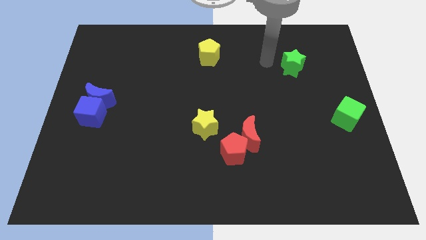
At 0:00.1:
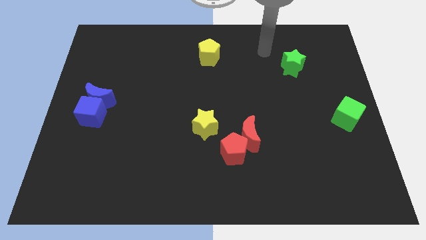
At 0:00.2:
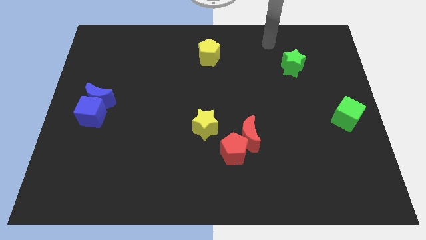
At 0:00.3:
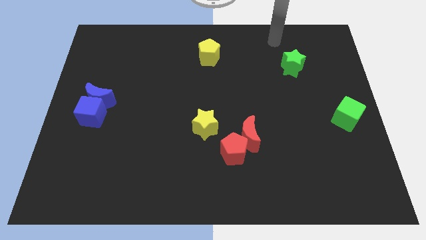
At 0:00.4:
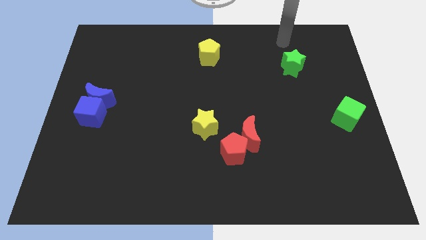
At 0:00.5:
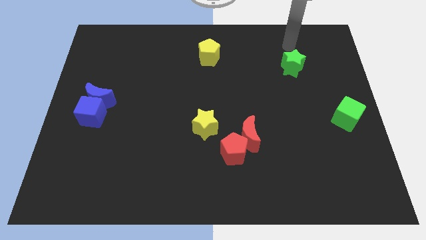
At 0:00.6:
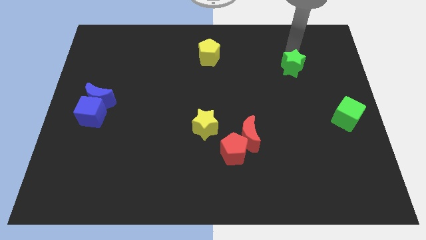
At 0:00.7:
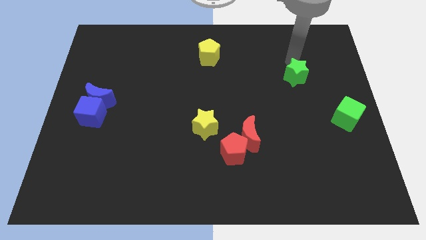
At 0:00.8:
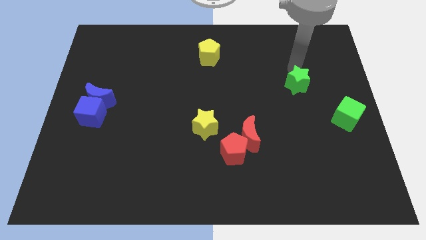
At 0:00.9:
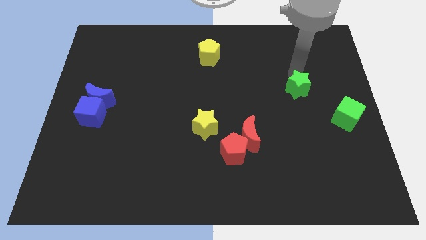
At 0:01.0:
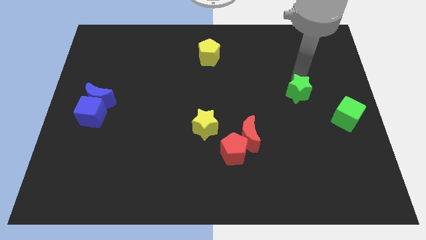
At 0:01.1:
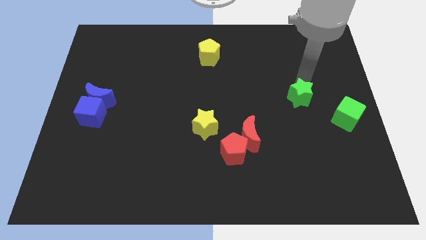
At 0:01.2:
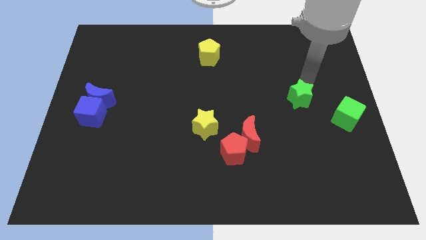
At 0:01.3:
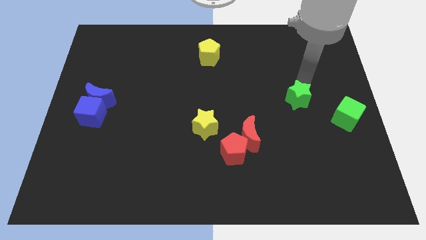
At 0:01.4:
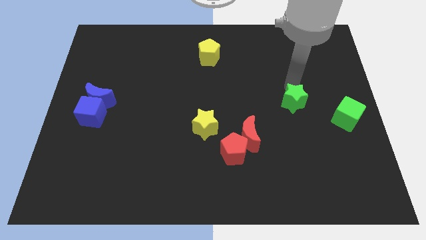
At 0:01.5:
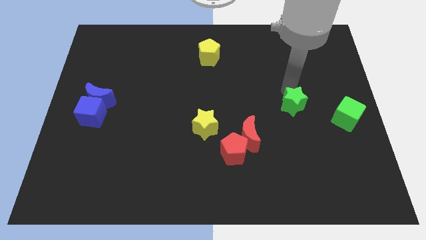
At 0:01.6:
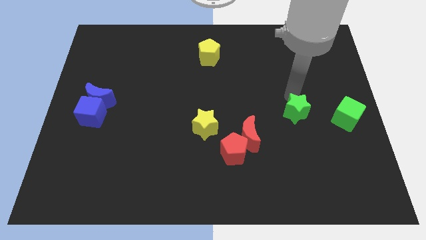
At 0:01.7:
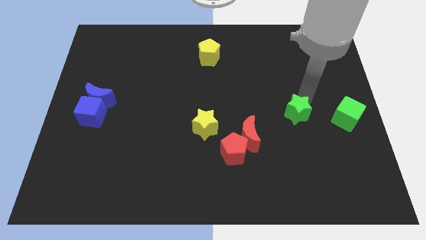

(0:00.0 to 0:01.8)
place the green star horizontally to the left side of the green cube

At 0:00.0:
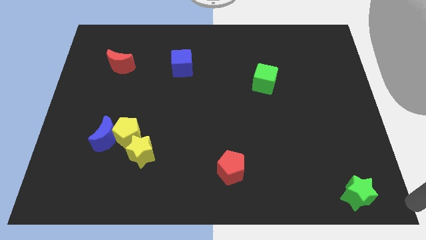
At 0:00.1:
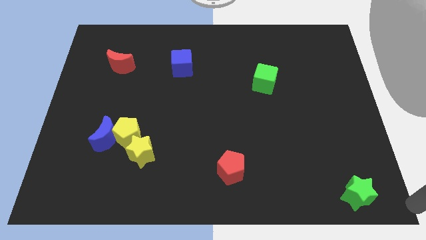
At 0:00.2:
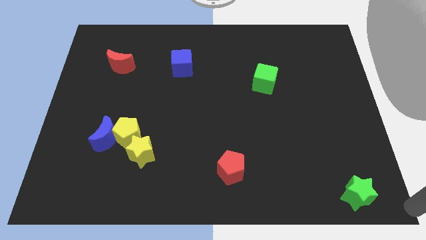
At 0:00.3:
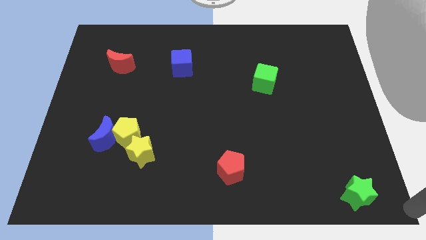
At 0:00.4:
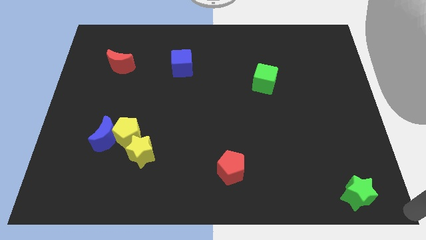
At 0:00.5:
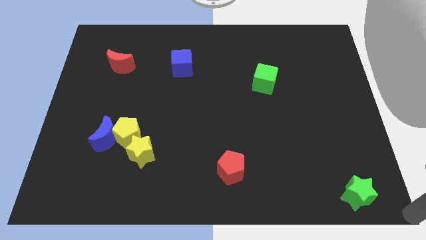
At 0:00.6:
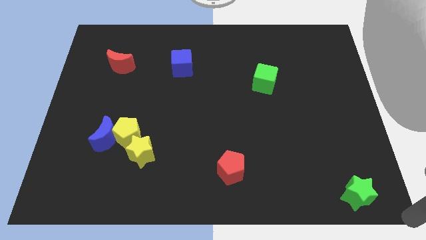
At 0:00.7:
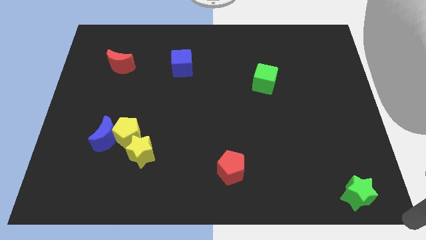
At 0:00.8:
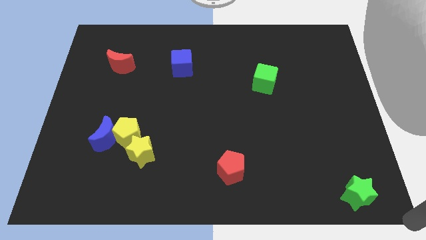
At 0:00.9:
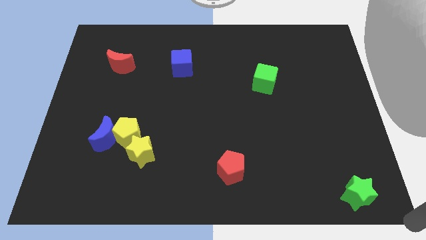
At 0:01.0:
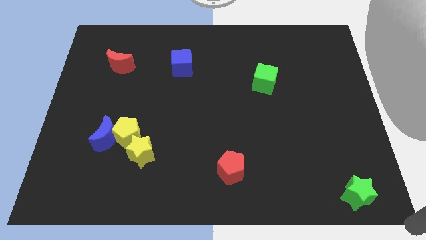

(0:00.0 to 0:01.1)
move your arm at the bottom right corner

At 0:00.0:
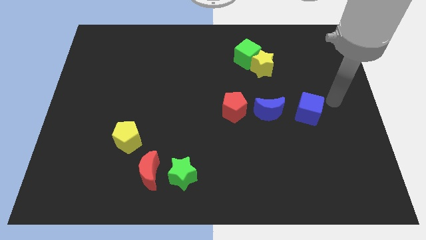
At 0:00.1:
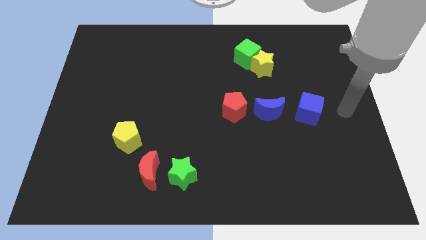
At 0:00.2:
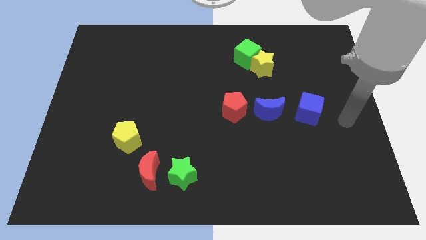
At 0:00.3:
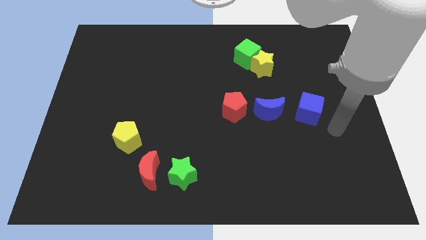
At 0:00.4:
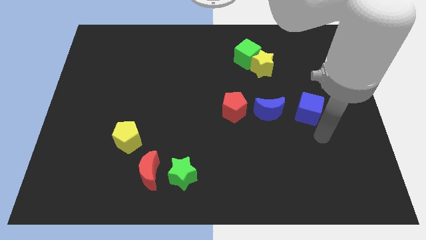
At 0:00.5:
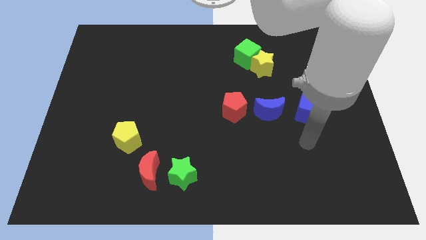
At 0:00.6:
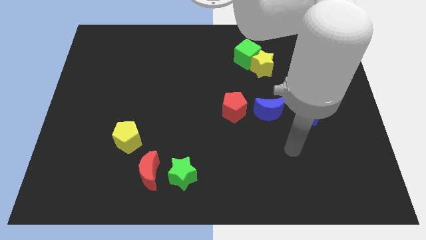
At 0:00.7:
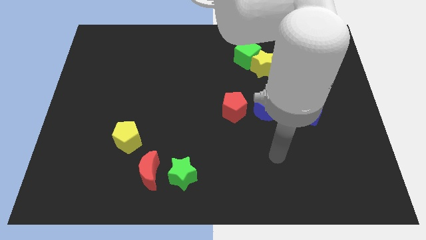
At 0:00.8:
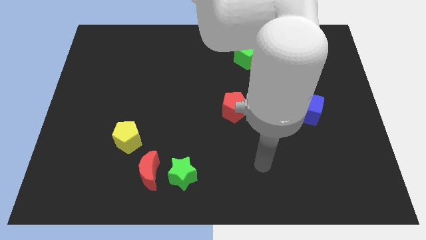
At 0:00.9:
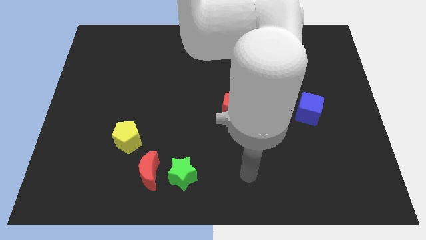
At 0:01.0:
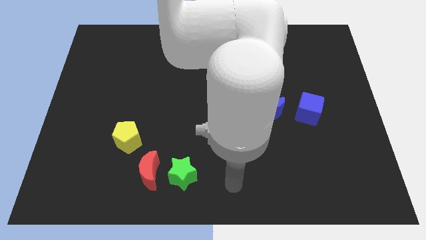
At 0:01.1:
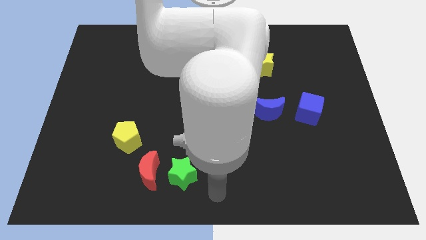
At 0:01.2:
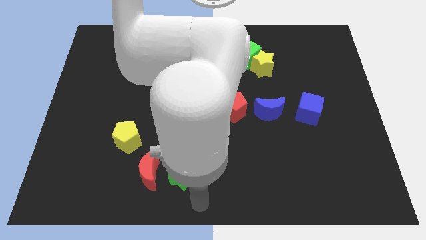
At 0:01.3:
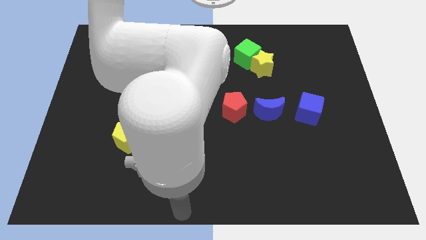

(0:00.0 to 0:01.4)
point your arm below the green star

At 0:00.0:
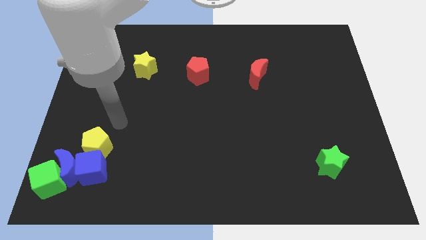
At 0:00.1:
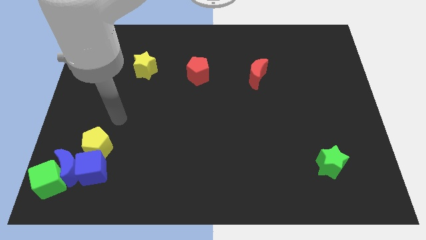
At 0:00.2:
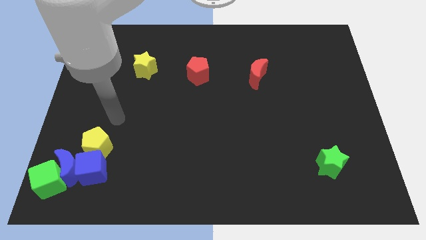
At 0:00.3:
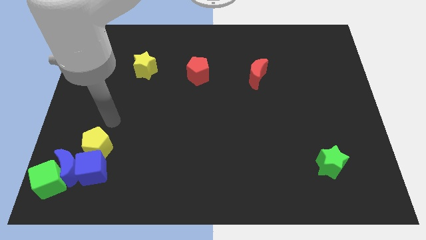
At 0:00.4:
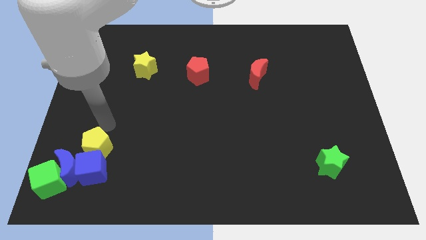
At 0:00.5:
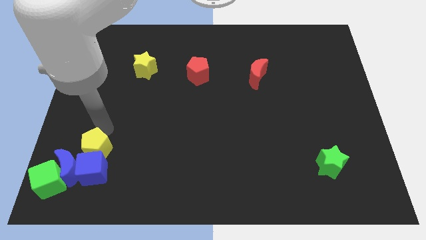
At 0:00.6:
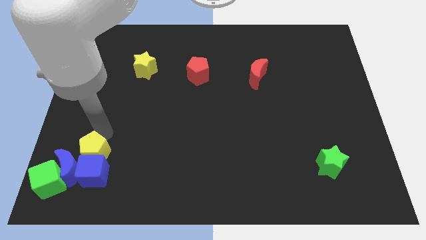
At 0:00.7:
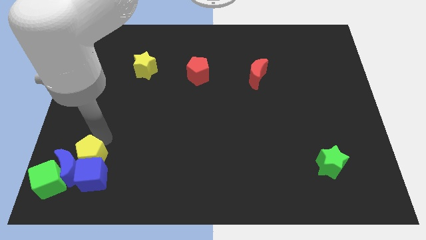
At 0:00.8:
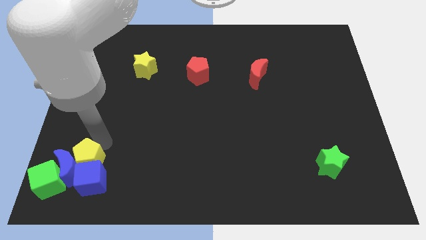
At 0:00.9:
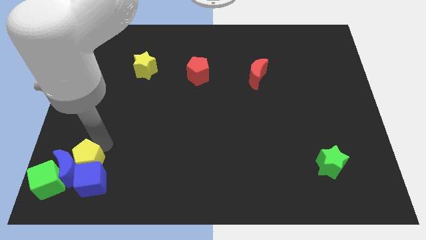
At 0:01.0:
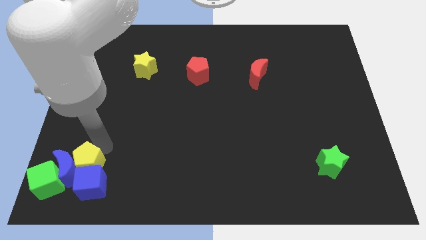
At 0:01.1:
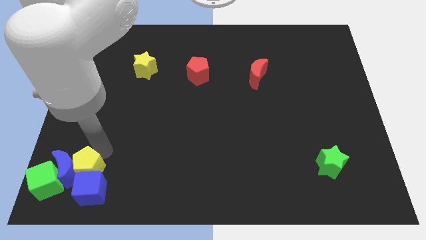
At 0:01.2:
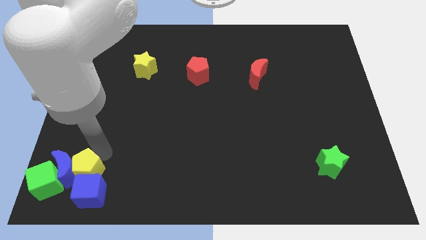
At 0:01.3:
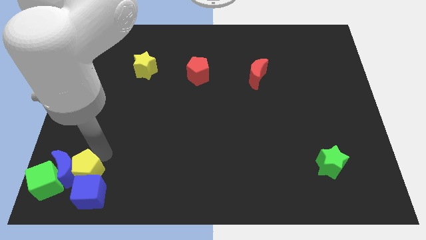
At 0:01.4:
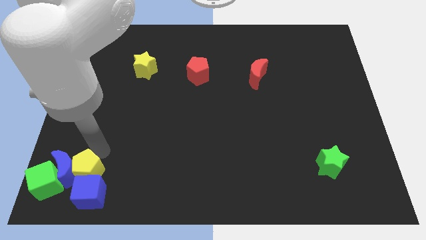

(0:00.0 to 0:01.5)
push the yellow pentagon and blue cube to the bottom

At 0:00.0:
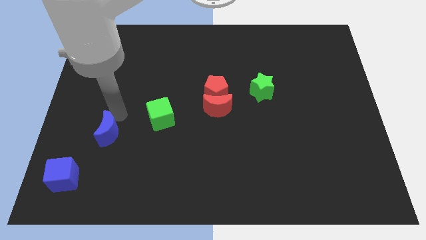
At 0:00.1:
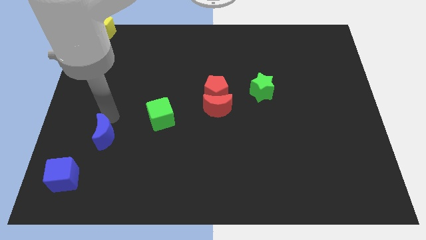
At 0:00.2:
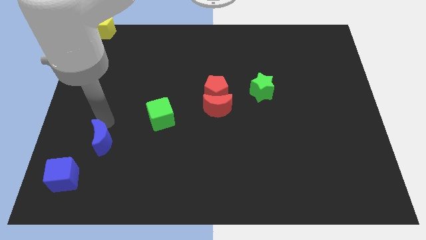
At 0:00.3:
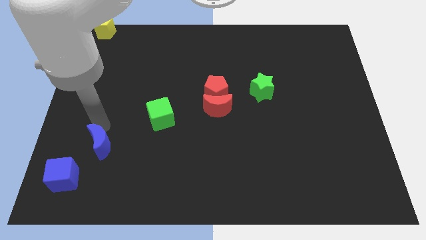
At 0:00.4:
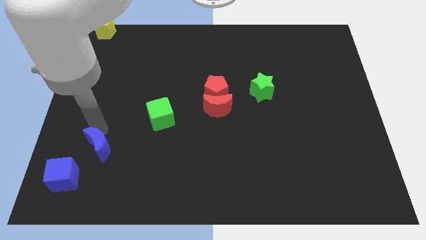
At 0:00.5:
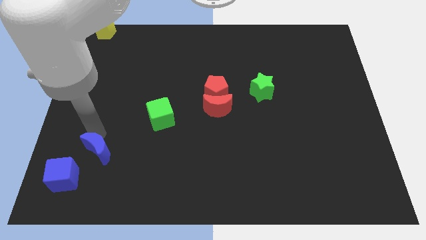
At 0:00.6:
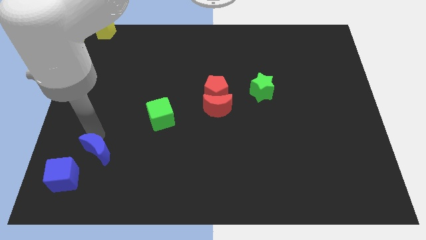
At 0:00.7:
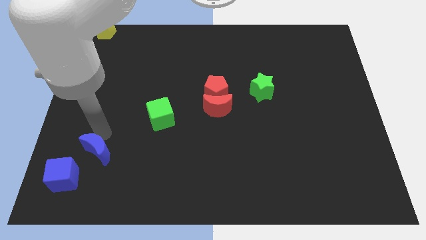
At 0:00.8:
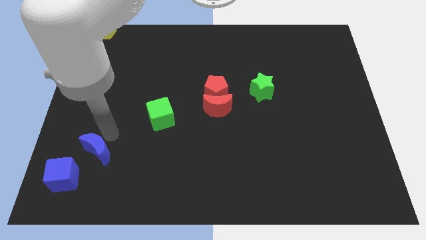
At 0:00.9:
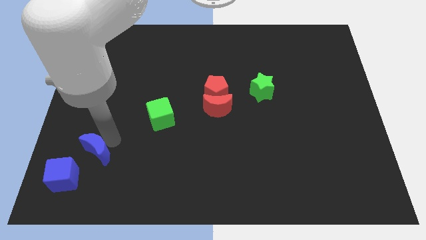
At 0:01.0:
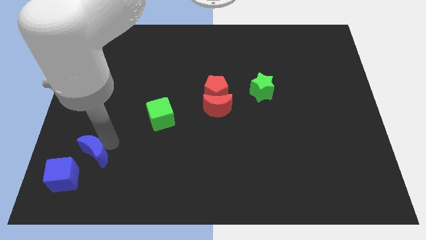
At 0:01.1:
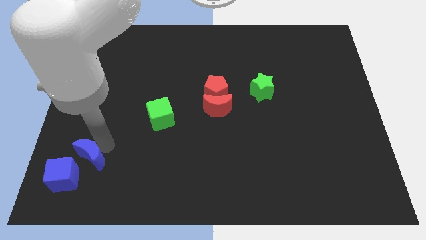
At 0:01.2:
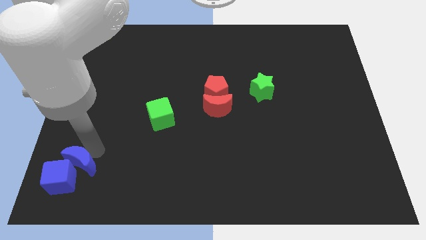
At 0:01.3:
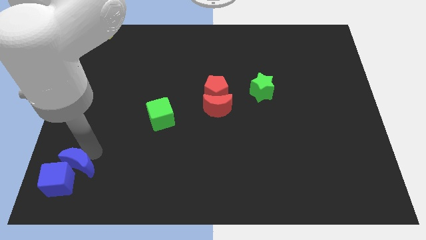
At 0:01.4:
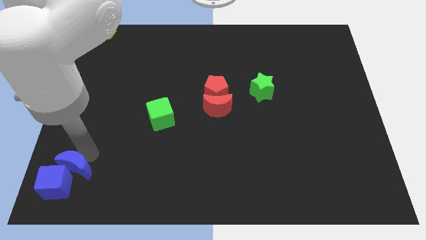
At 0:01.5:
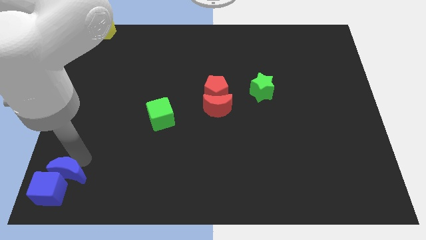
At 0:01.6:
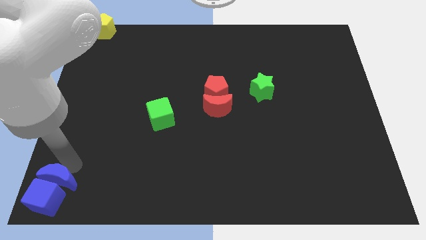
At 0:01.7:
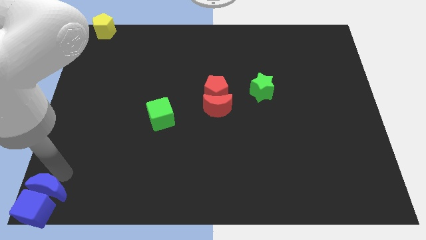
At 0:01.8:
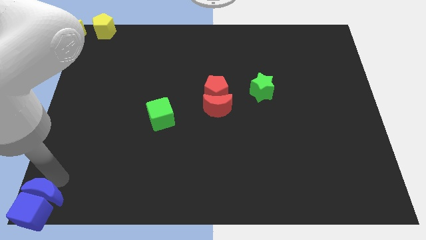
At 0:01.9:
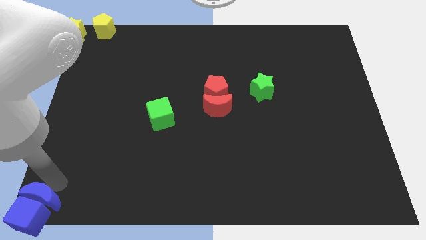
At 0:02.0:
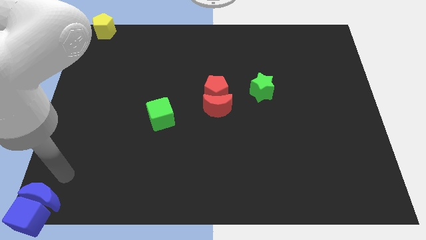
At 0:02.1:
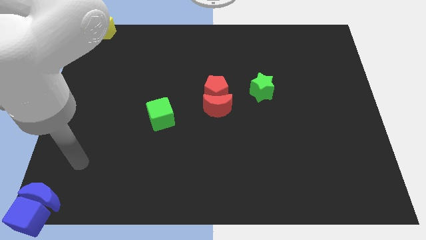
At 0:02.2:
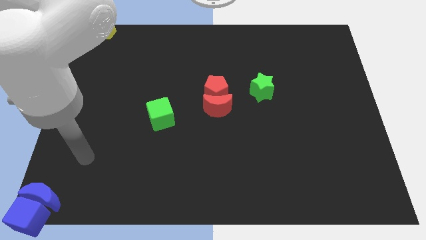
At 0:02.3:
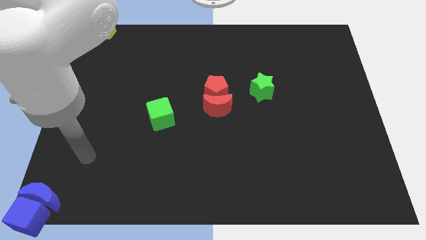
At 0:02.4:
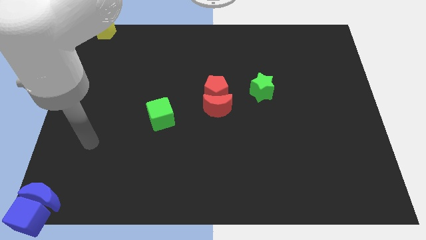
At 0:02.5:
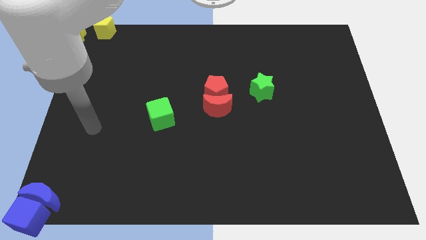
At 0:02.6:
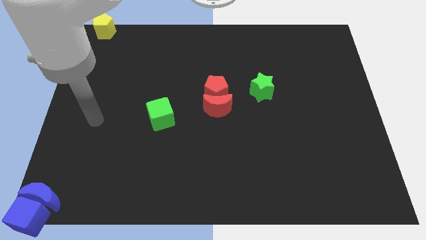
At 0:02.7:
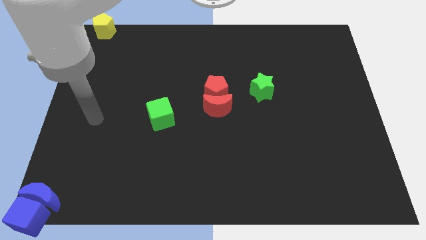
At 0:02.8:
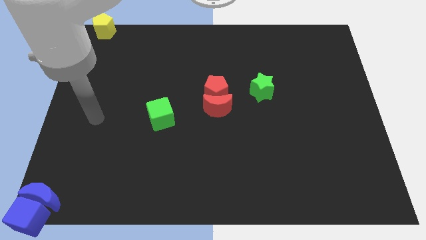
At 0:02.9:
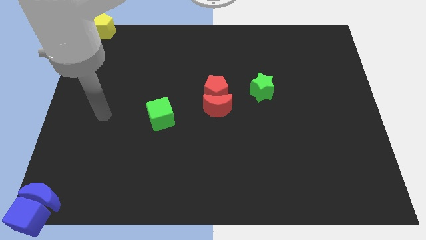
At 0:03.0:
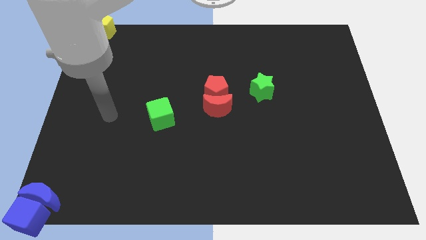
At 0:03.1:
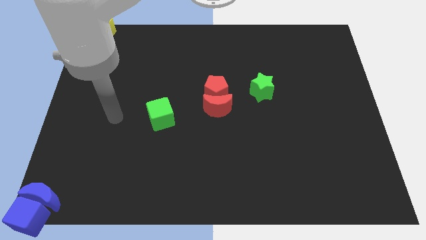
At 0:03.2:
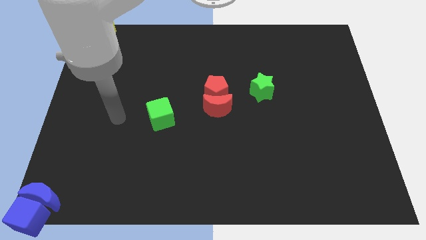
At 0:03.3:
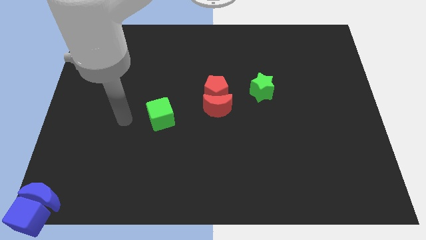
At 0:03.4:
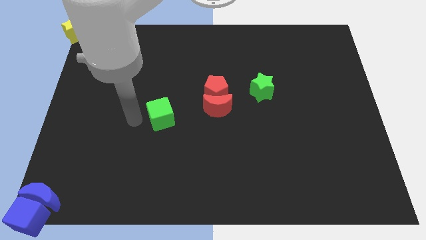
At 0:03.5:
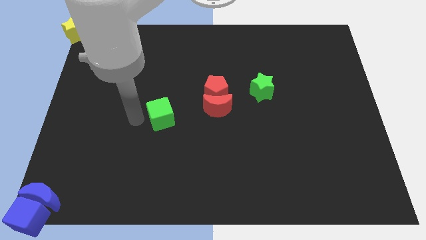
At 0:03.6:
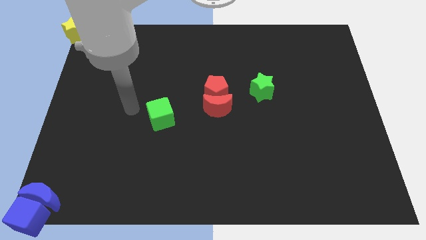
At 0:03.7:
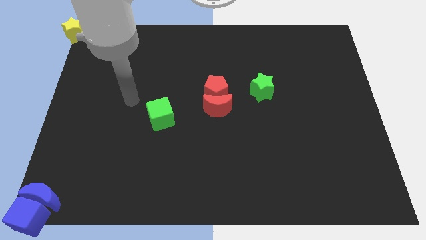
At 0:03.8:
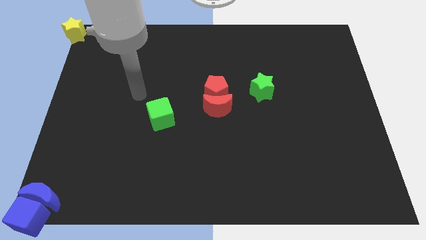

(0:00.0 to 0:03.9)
move blue blocks to the bottom left corner
